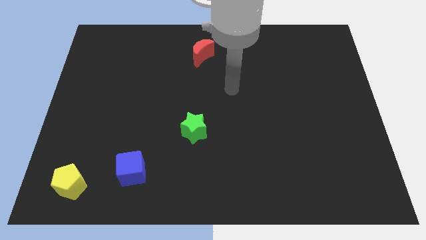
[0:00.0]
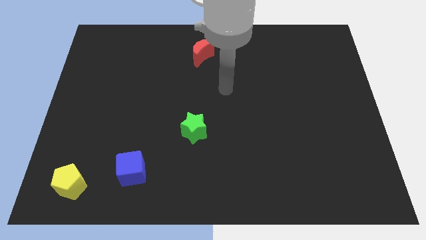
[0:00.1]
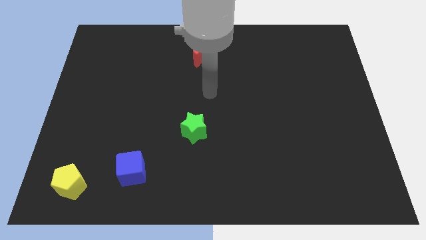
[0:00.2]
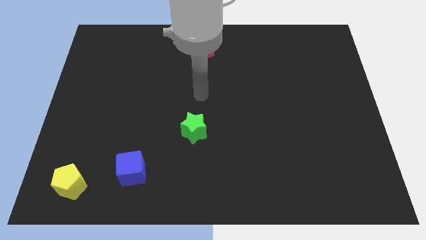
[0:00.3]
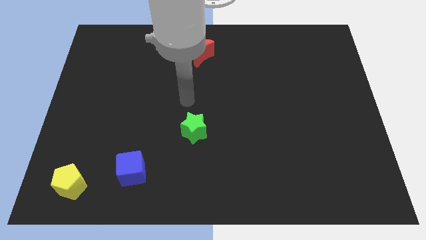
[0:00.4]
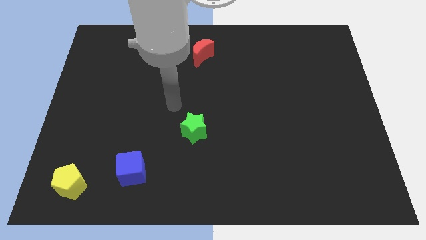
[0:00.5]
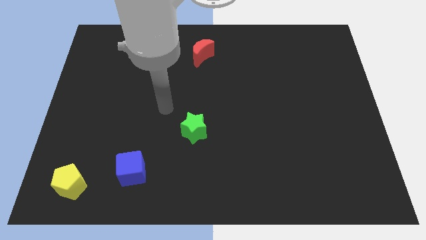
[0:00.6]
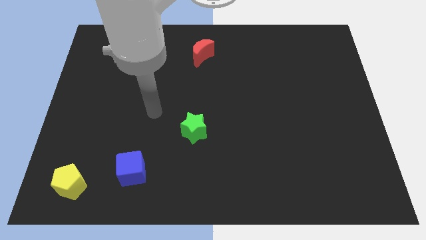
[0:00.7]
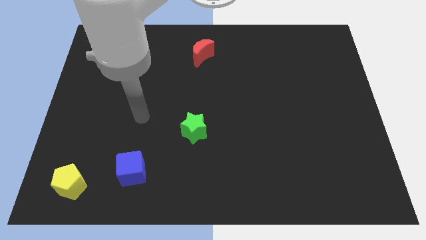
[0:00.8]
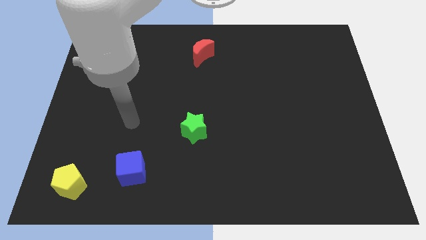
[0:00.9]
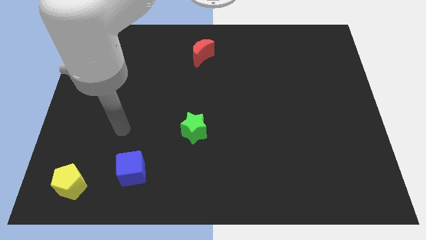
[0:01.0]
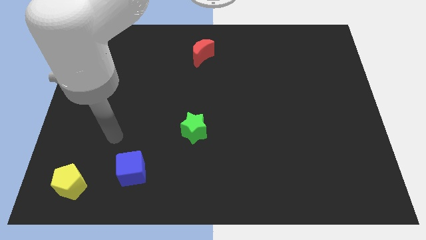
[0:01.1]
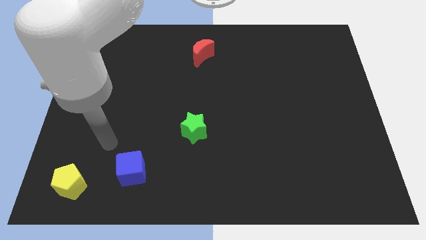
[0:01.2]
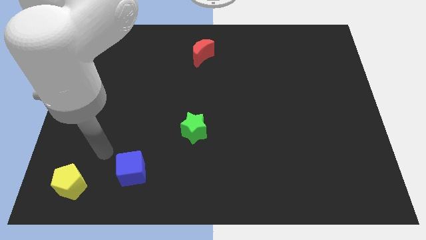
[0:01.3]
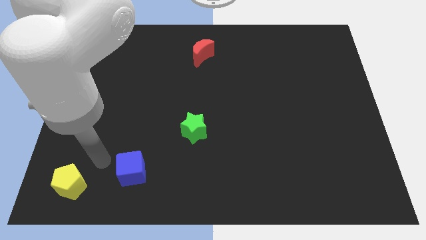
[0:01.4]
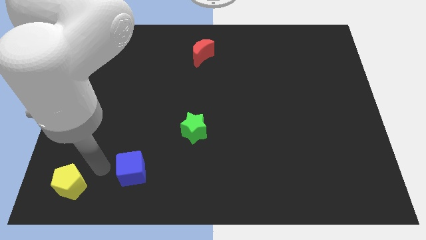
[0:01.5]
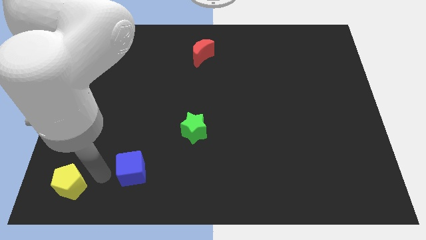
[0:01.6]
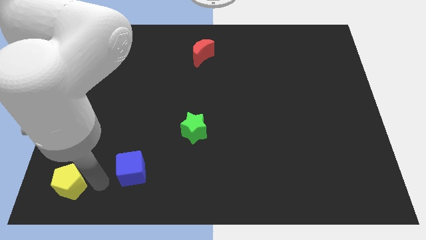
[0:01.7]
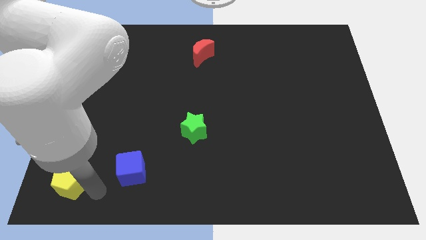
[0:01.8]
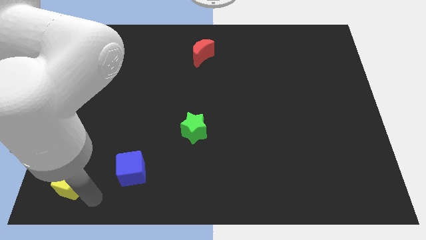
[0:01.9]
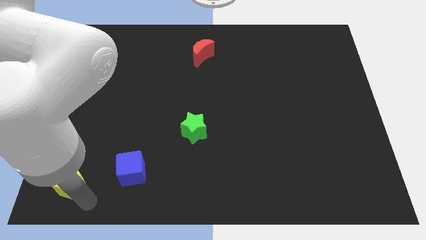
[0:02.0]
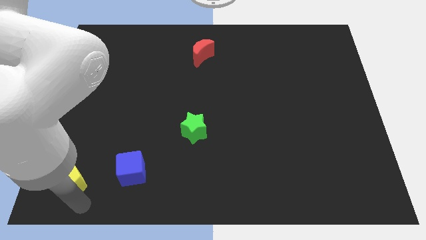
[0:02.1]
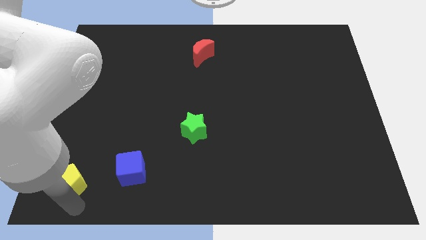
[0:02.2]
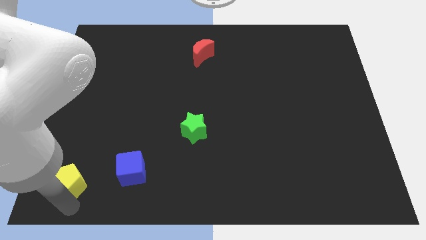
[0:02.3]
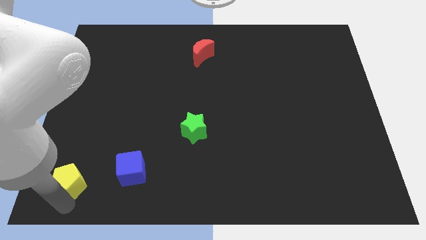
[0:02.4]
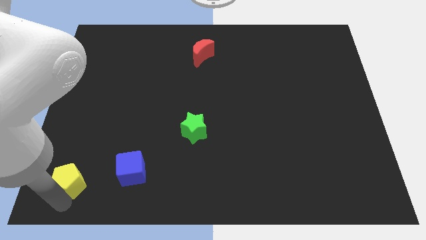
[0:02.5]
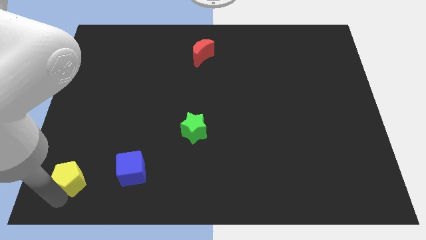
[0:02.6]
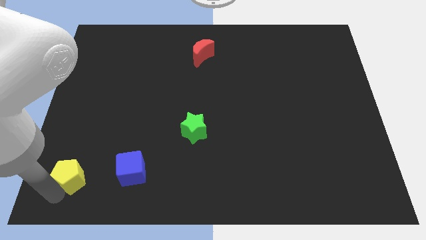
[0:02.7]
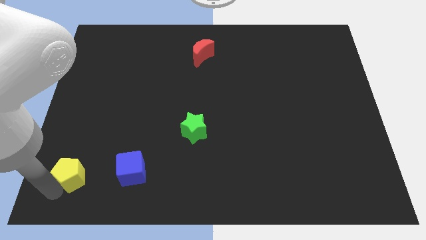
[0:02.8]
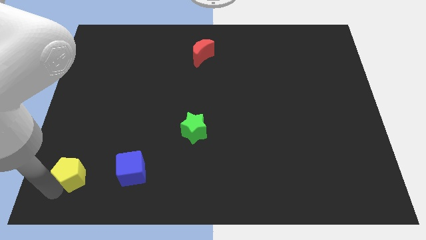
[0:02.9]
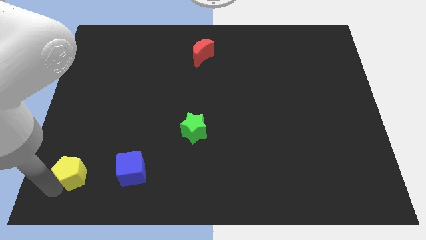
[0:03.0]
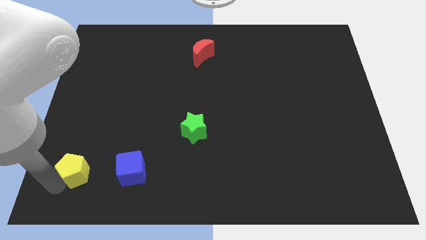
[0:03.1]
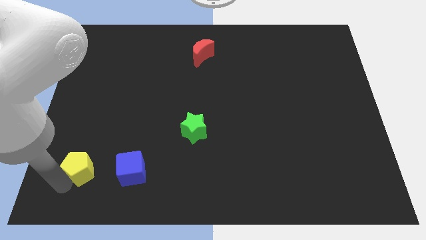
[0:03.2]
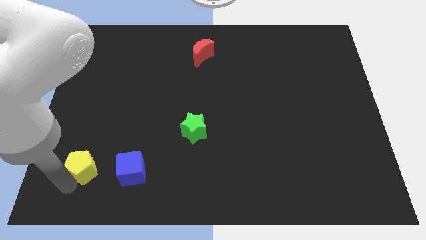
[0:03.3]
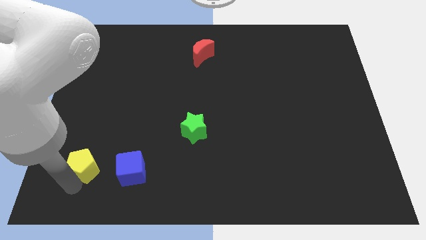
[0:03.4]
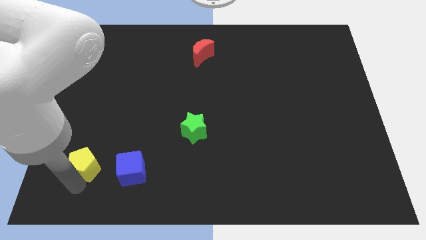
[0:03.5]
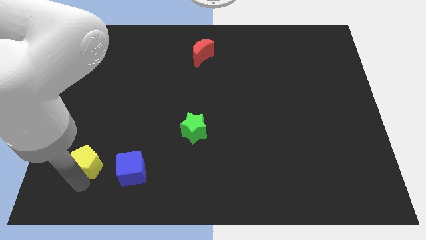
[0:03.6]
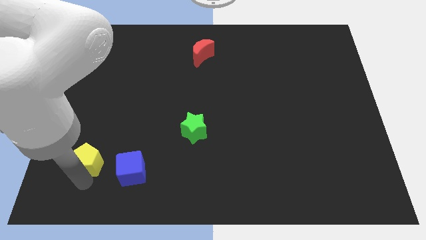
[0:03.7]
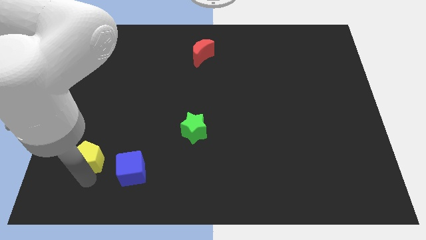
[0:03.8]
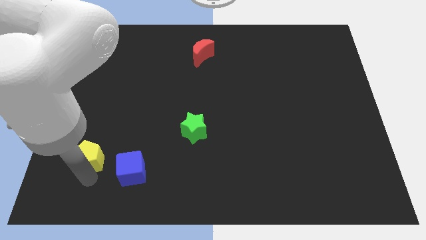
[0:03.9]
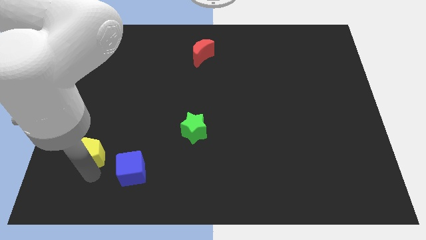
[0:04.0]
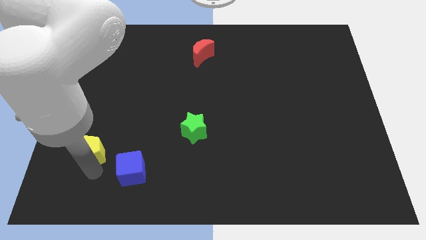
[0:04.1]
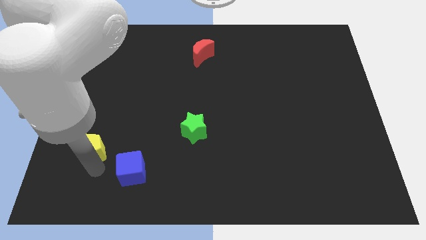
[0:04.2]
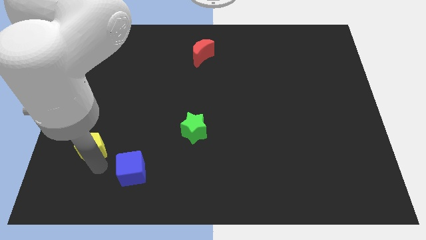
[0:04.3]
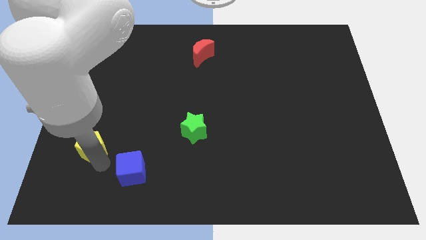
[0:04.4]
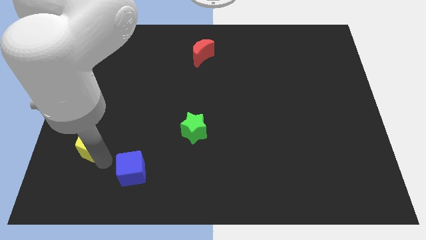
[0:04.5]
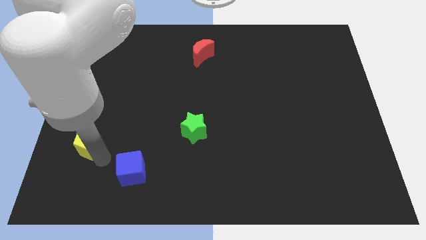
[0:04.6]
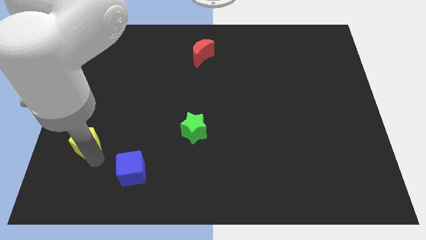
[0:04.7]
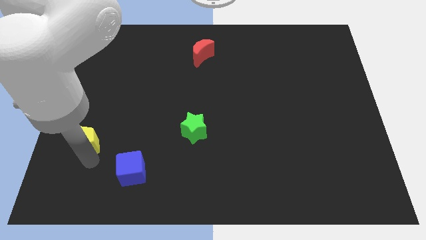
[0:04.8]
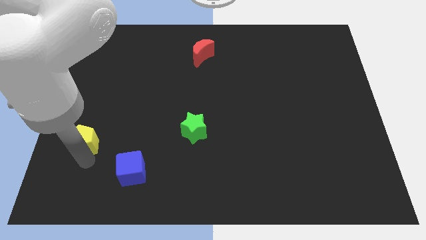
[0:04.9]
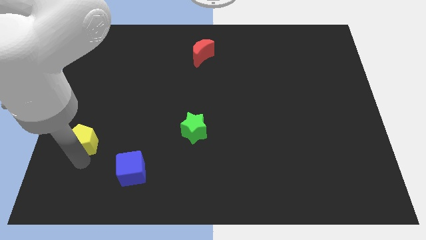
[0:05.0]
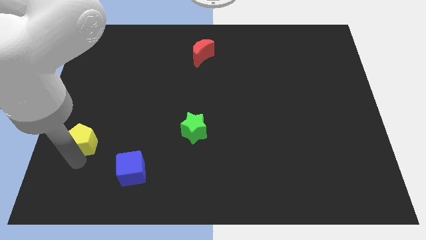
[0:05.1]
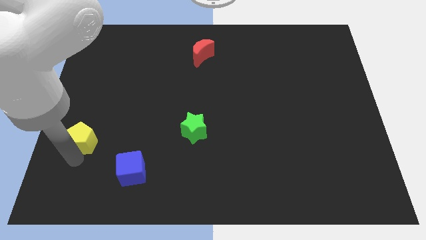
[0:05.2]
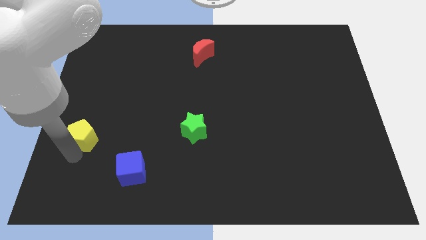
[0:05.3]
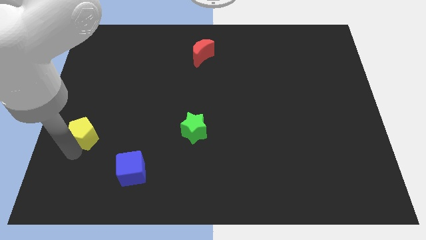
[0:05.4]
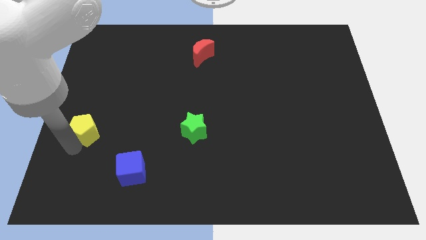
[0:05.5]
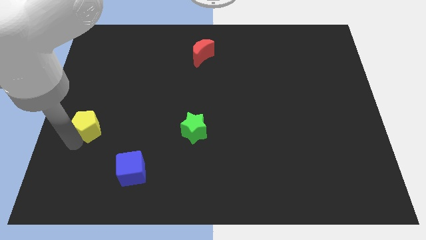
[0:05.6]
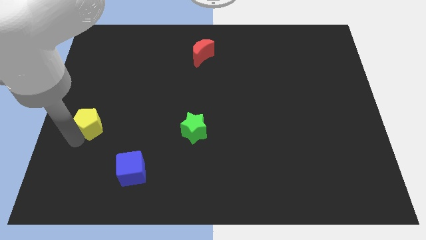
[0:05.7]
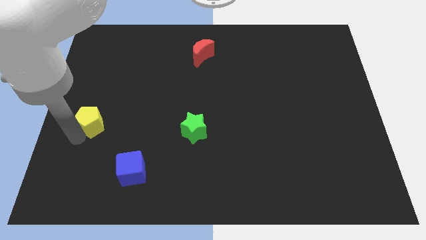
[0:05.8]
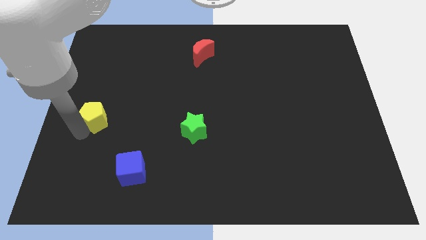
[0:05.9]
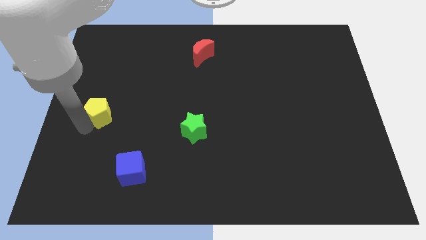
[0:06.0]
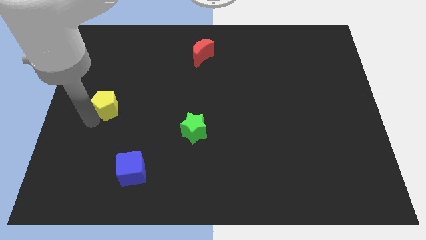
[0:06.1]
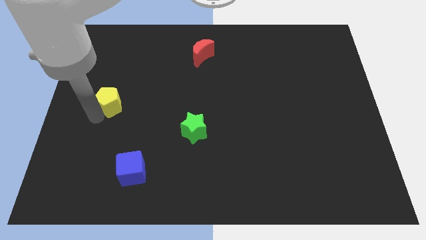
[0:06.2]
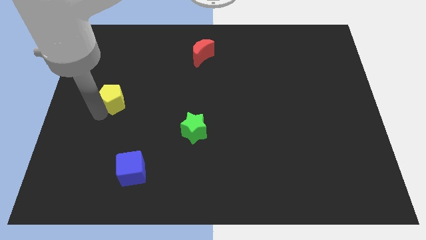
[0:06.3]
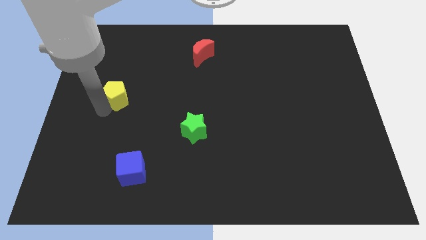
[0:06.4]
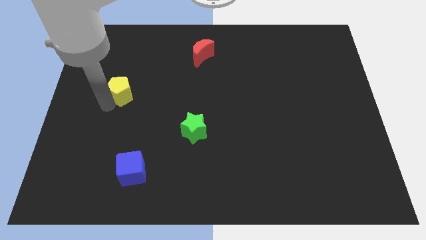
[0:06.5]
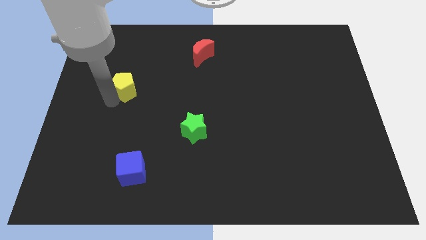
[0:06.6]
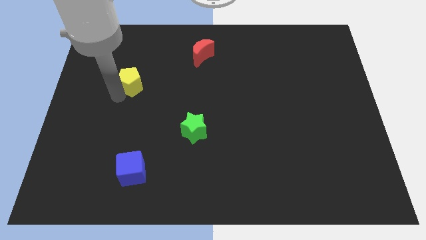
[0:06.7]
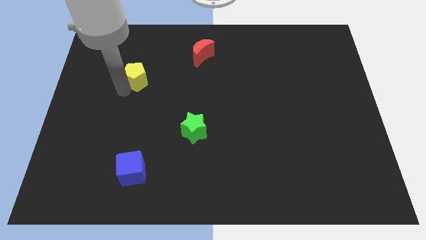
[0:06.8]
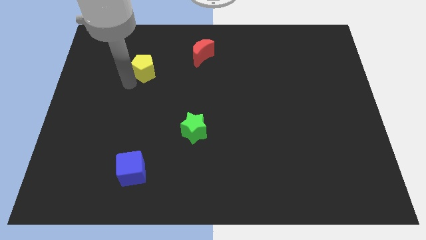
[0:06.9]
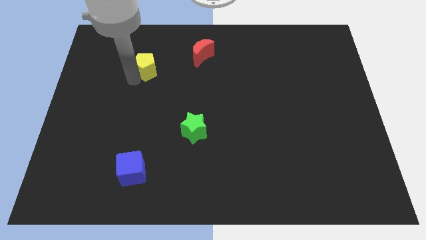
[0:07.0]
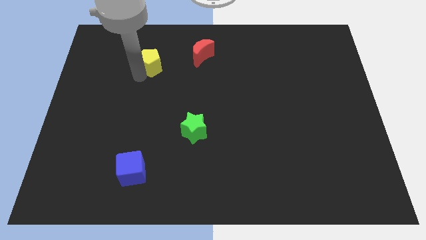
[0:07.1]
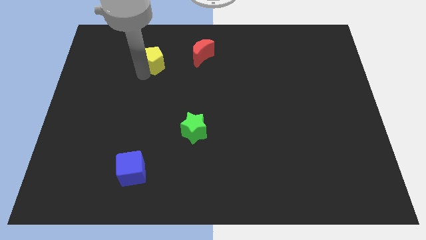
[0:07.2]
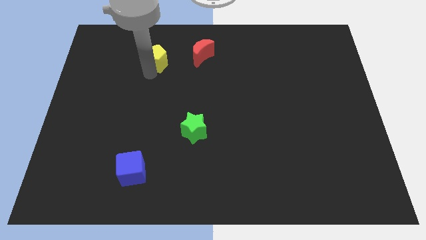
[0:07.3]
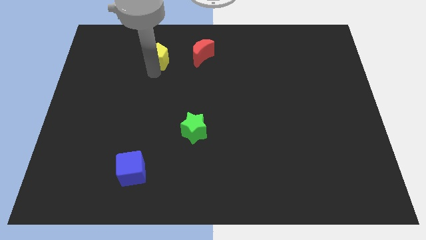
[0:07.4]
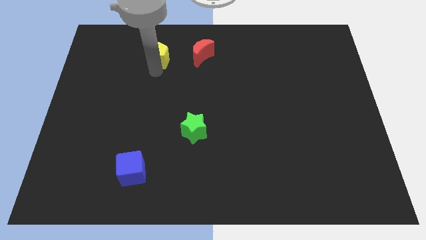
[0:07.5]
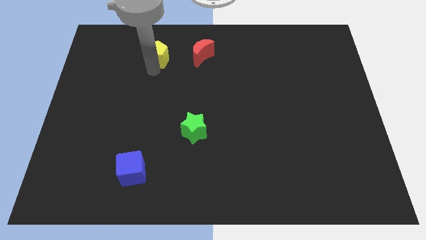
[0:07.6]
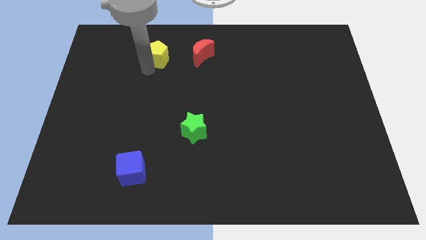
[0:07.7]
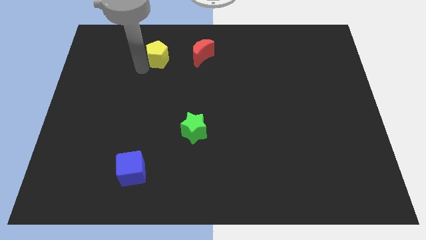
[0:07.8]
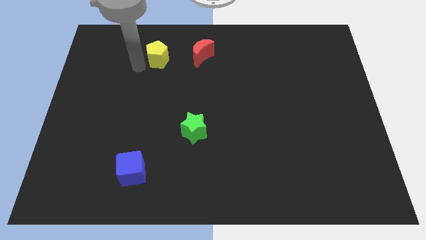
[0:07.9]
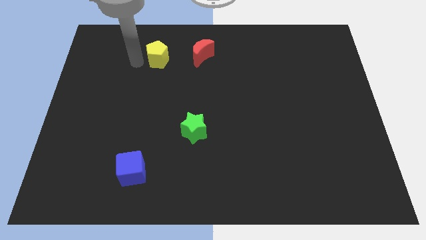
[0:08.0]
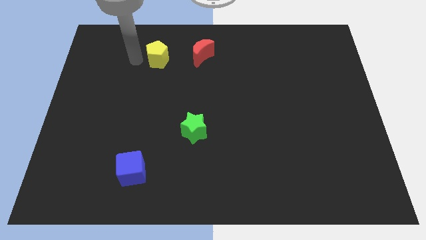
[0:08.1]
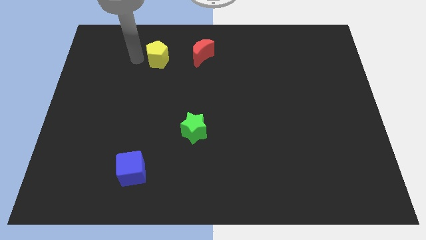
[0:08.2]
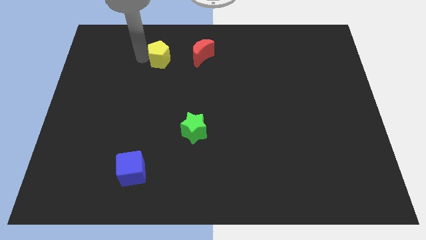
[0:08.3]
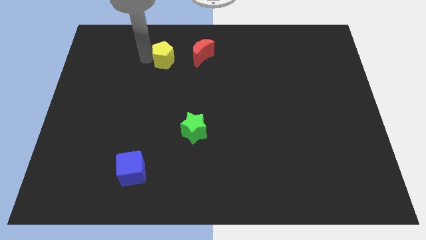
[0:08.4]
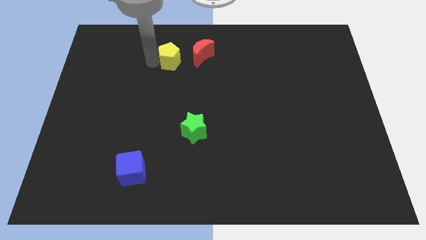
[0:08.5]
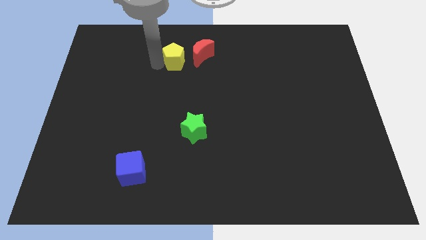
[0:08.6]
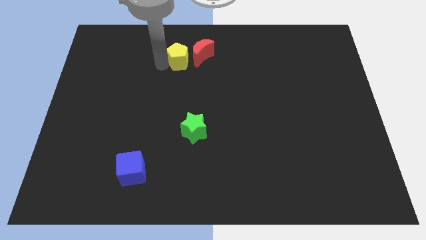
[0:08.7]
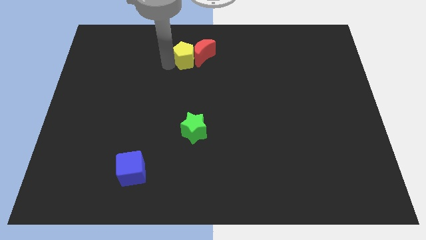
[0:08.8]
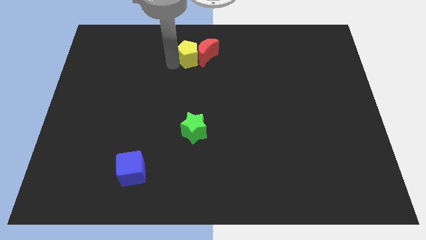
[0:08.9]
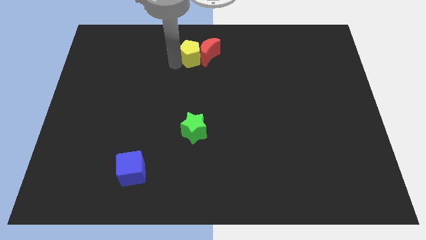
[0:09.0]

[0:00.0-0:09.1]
slide the pentagon towards the moon
